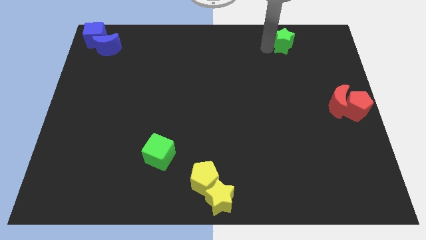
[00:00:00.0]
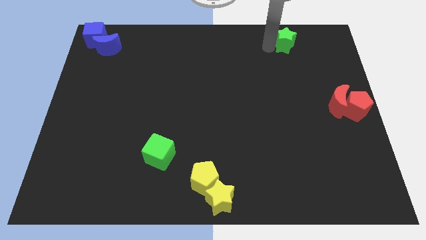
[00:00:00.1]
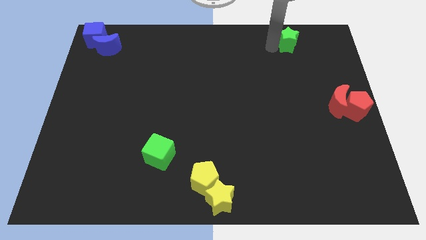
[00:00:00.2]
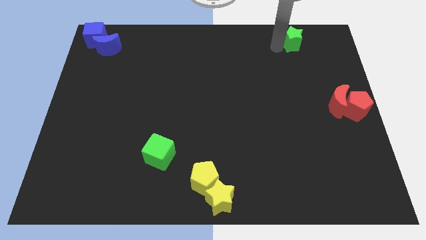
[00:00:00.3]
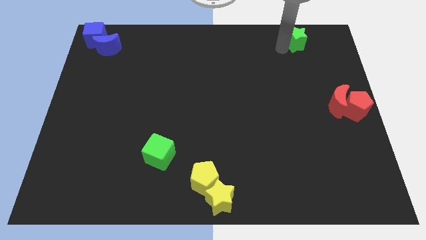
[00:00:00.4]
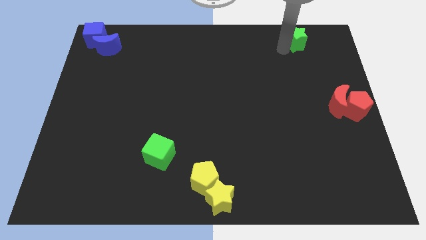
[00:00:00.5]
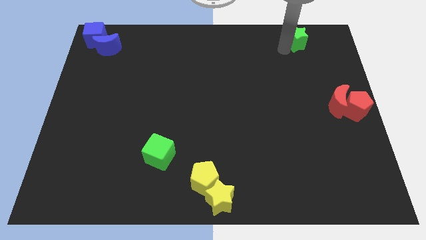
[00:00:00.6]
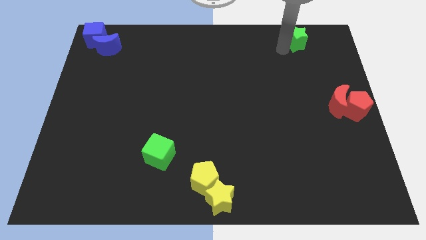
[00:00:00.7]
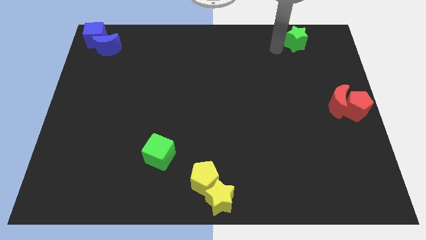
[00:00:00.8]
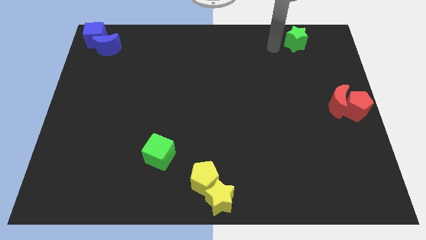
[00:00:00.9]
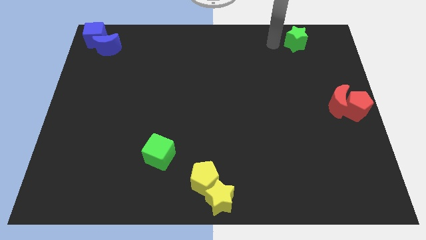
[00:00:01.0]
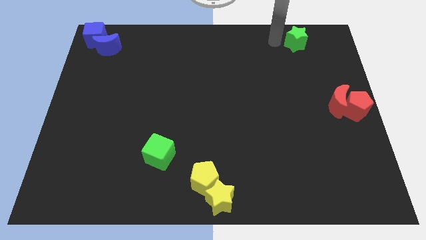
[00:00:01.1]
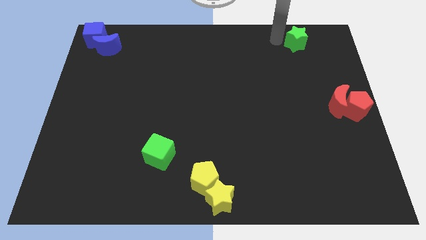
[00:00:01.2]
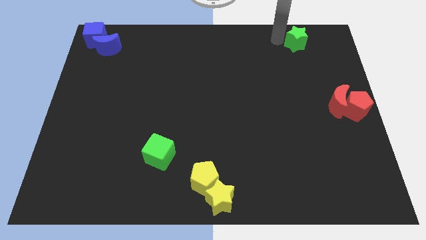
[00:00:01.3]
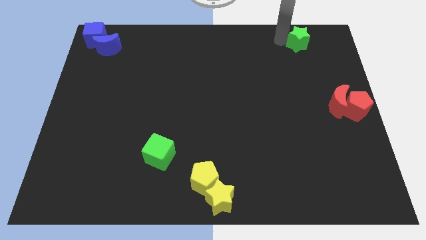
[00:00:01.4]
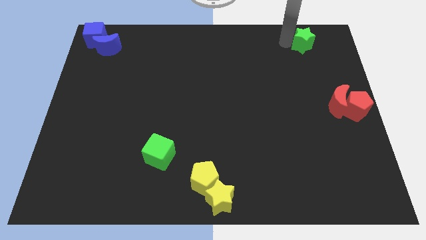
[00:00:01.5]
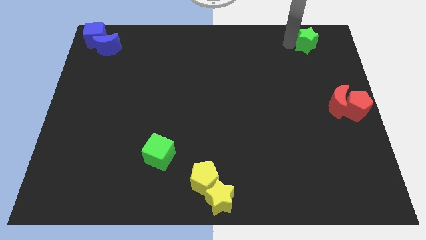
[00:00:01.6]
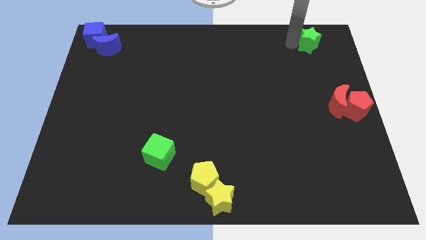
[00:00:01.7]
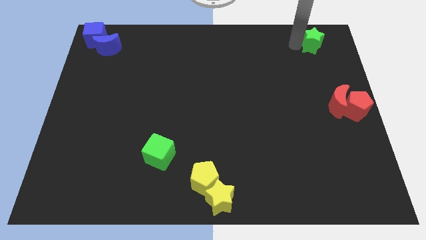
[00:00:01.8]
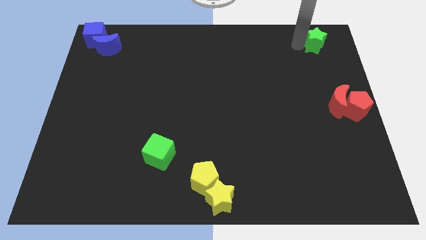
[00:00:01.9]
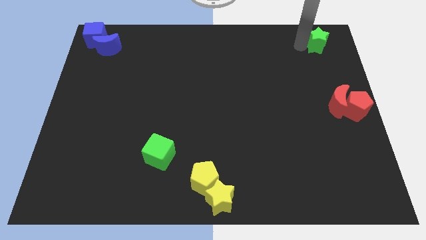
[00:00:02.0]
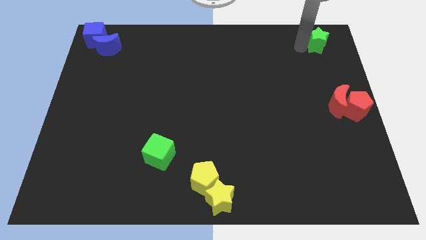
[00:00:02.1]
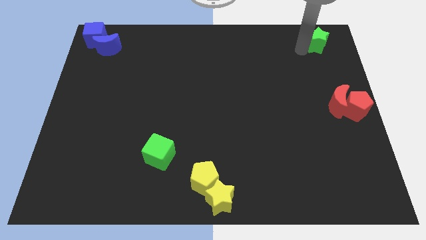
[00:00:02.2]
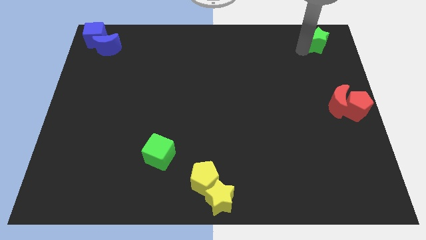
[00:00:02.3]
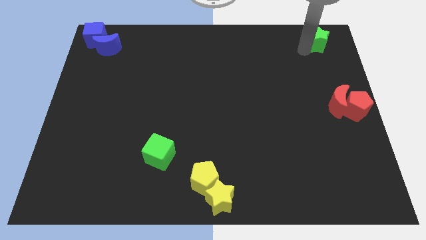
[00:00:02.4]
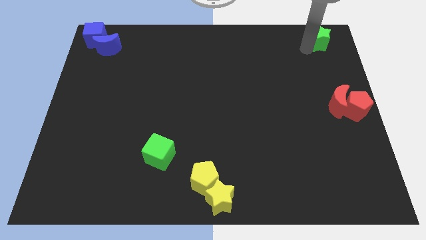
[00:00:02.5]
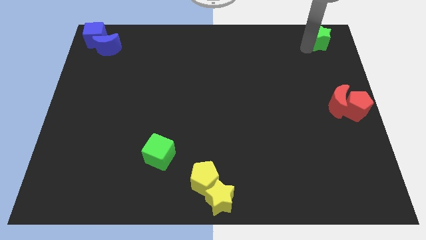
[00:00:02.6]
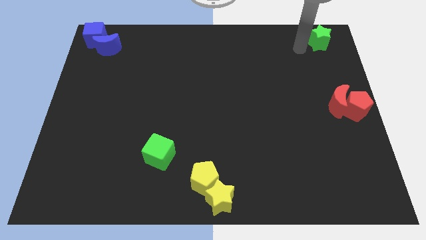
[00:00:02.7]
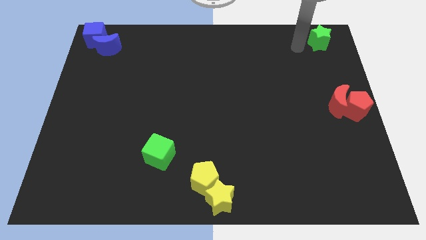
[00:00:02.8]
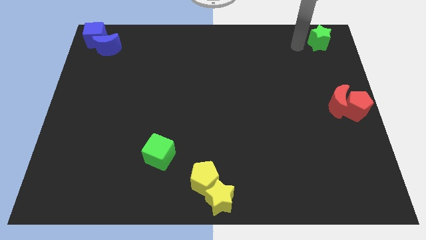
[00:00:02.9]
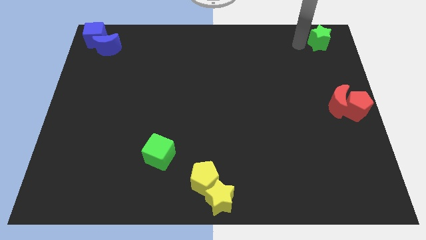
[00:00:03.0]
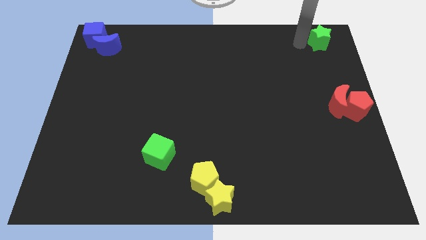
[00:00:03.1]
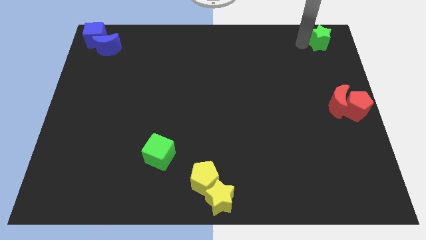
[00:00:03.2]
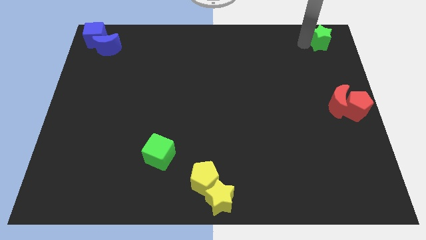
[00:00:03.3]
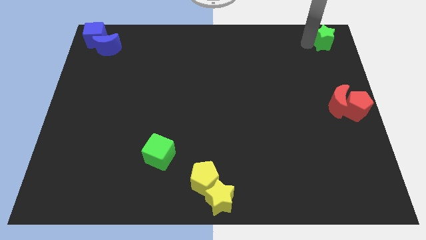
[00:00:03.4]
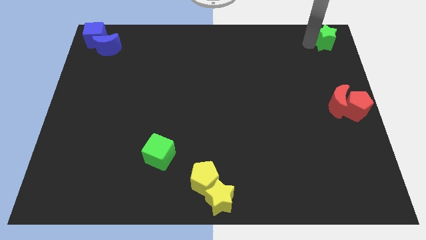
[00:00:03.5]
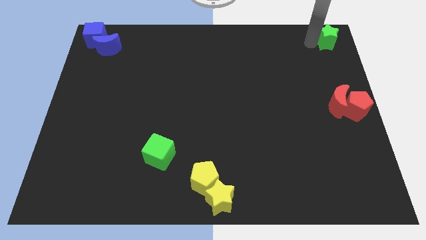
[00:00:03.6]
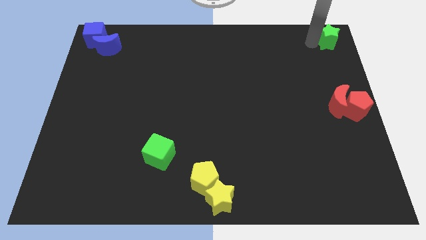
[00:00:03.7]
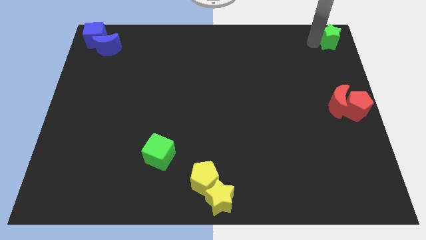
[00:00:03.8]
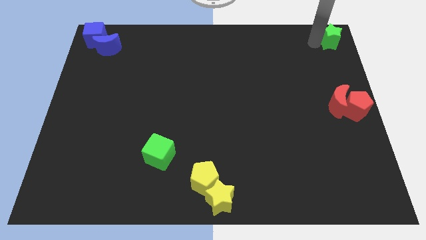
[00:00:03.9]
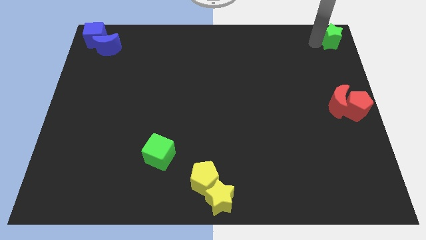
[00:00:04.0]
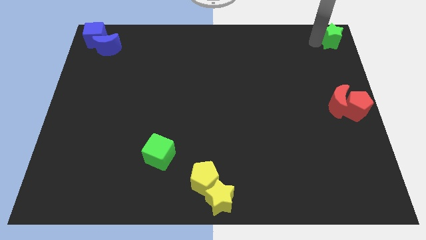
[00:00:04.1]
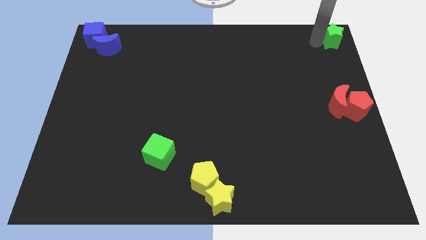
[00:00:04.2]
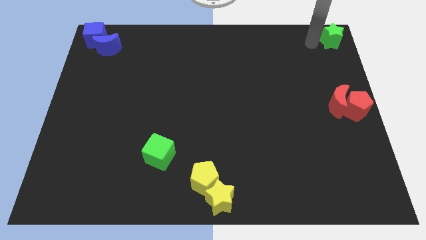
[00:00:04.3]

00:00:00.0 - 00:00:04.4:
place the green star to the top right corner of the board

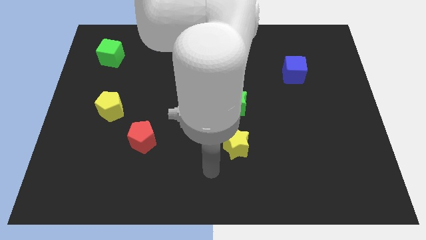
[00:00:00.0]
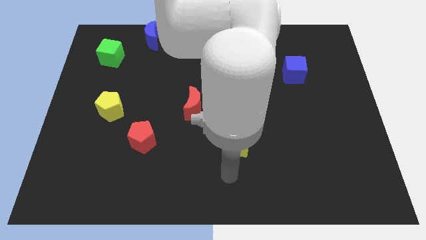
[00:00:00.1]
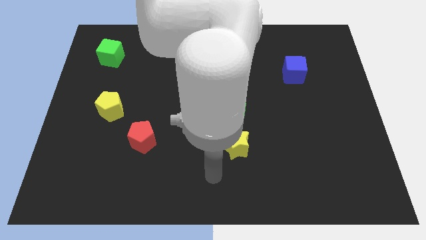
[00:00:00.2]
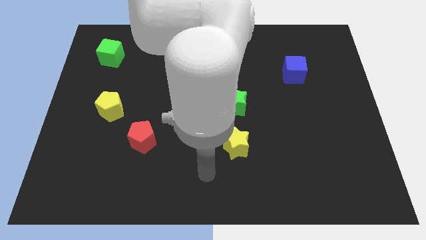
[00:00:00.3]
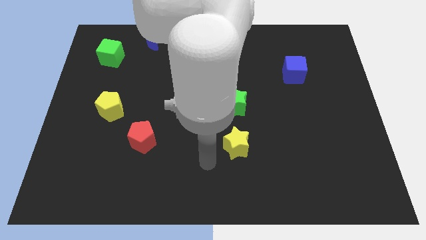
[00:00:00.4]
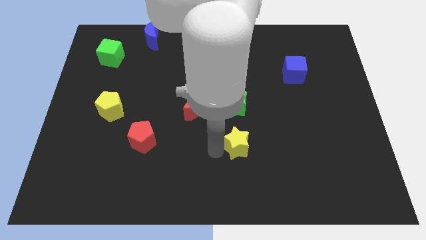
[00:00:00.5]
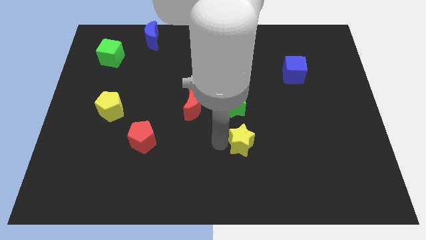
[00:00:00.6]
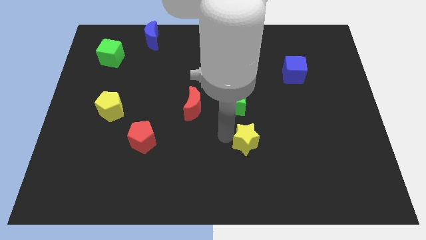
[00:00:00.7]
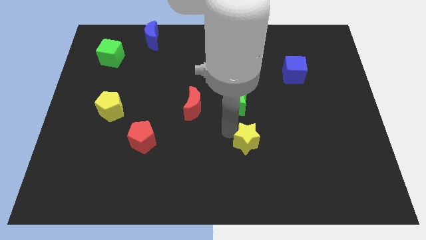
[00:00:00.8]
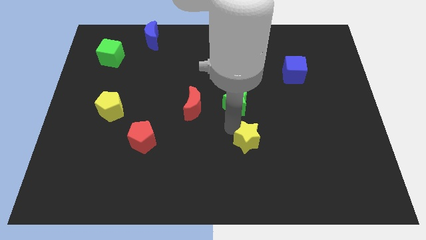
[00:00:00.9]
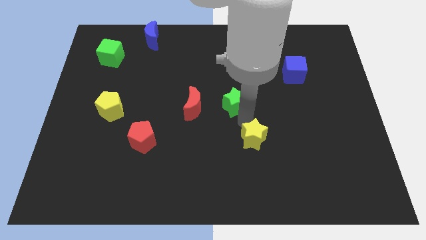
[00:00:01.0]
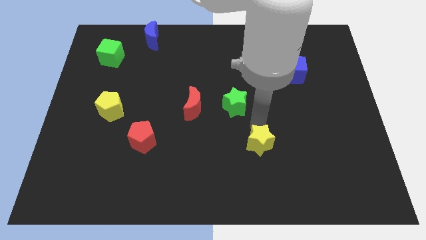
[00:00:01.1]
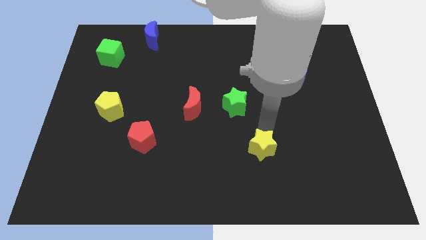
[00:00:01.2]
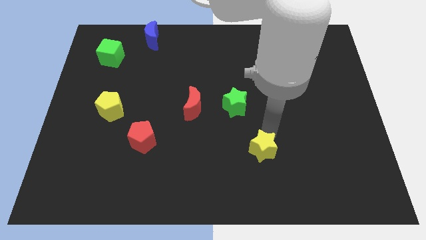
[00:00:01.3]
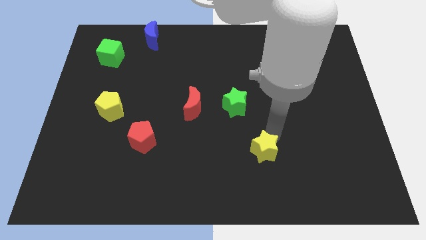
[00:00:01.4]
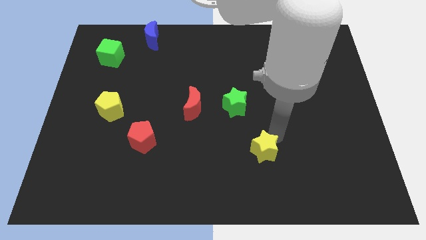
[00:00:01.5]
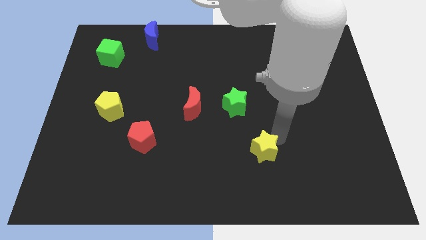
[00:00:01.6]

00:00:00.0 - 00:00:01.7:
move the yellow star diagonally bottom right to the green star

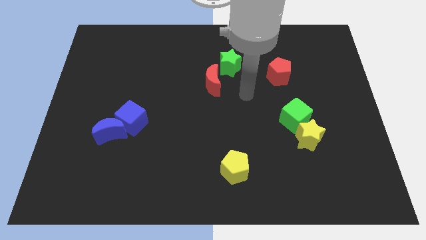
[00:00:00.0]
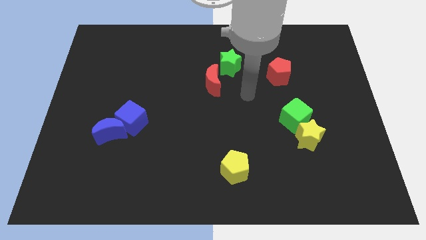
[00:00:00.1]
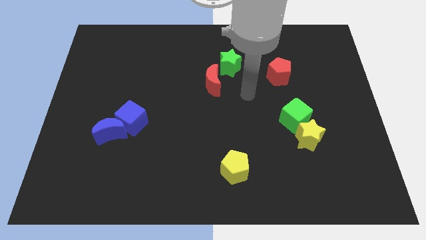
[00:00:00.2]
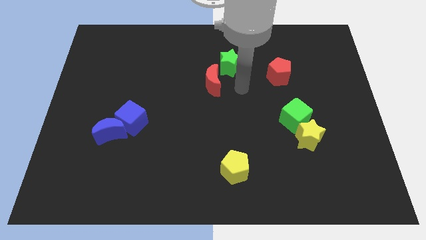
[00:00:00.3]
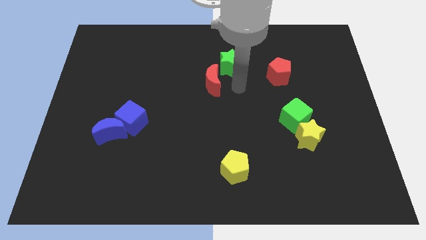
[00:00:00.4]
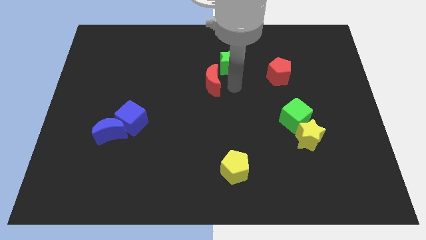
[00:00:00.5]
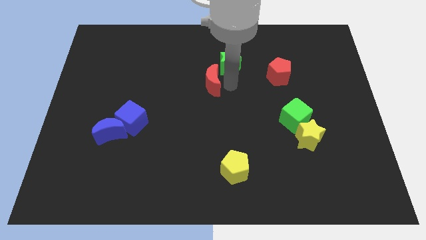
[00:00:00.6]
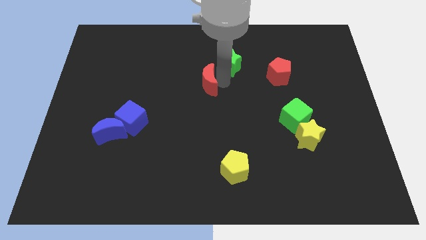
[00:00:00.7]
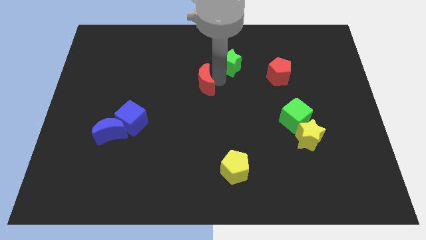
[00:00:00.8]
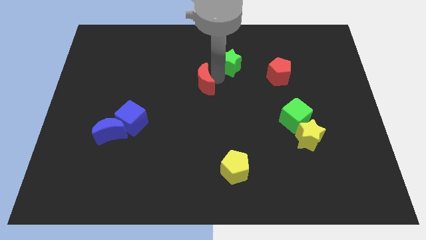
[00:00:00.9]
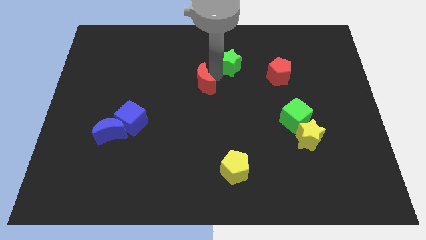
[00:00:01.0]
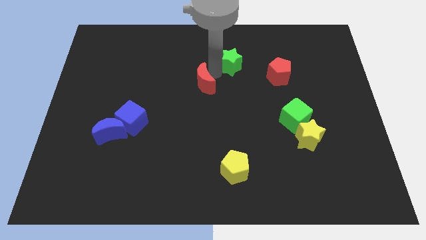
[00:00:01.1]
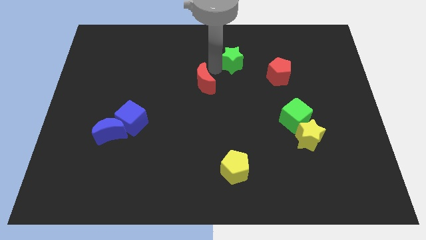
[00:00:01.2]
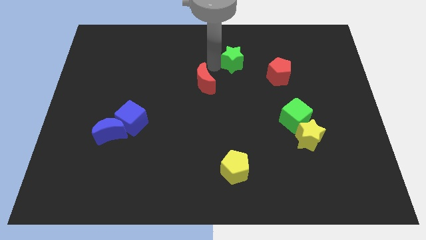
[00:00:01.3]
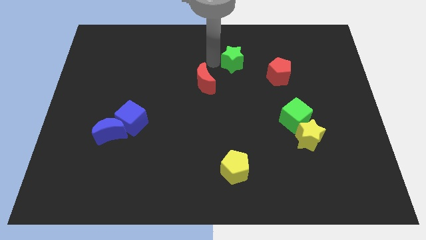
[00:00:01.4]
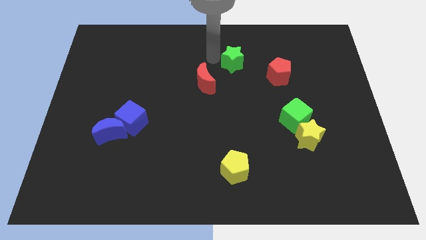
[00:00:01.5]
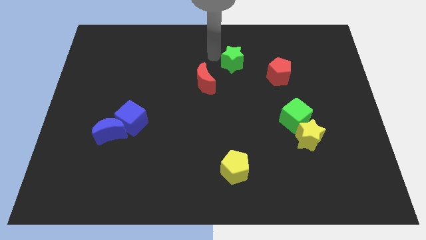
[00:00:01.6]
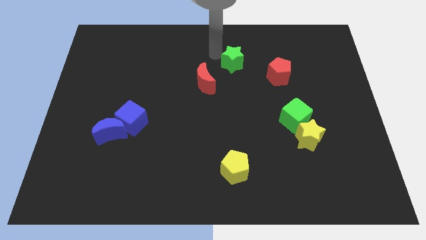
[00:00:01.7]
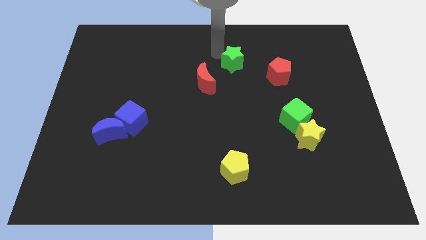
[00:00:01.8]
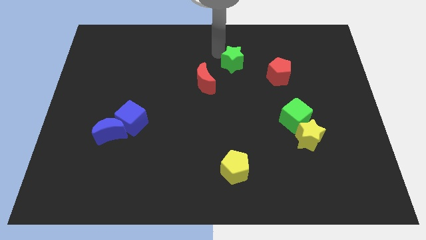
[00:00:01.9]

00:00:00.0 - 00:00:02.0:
separate the green star from the red crescent

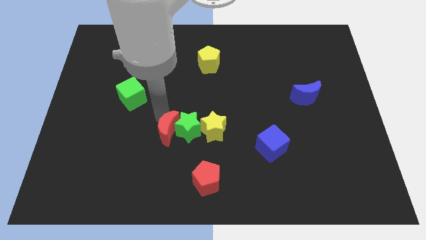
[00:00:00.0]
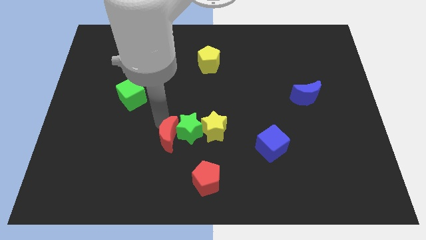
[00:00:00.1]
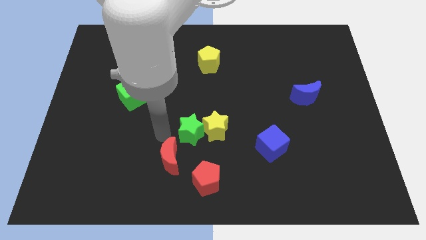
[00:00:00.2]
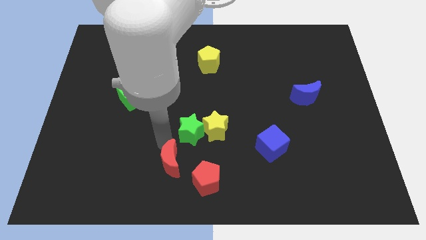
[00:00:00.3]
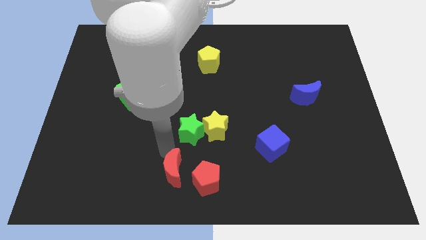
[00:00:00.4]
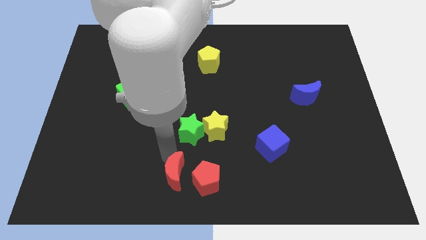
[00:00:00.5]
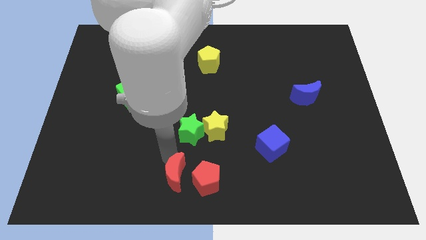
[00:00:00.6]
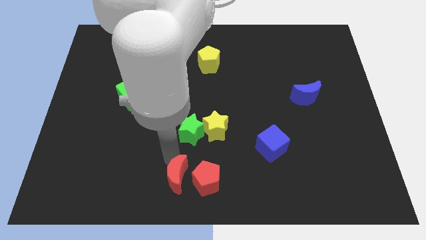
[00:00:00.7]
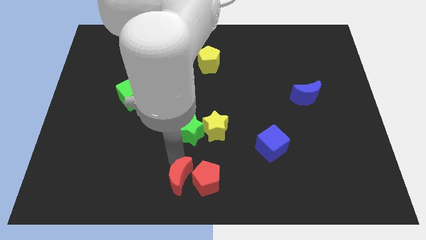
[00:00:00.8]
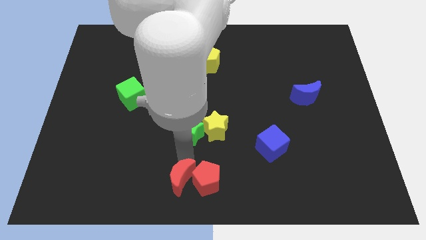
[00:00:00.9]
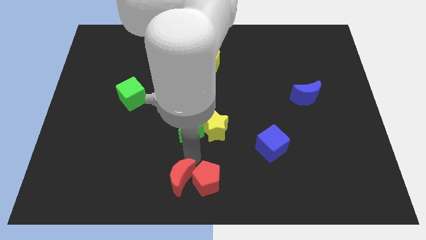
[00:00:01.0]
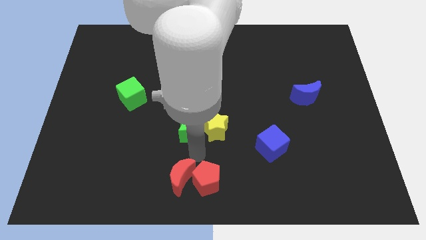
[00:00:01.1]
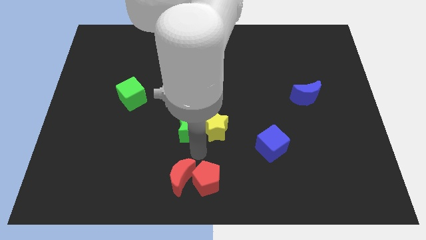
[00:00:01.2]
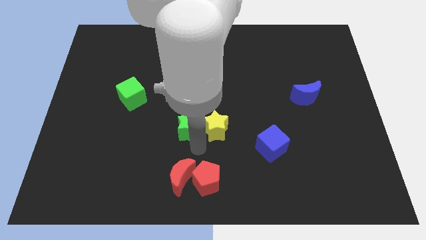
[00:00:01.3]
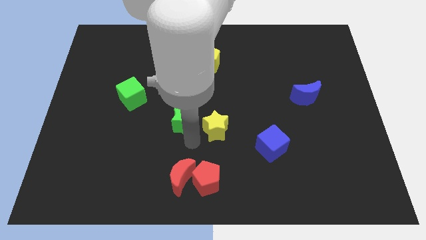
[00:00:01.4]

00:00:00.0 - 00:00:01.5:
push the red moon to the left side of the red pentagon
